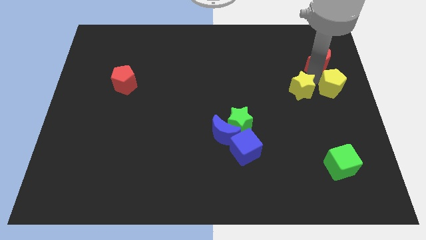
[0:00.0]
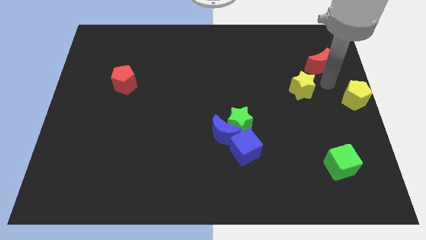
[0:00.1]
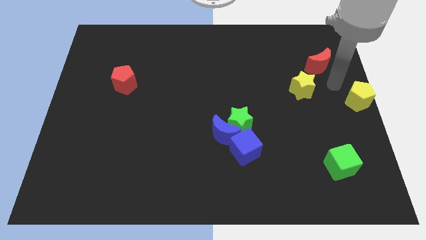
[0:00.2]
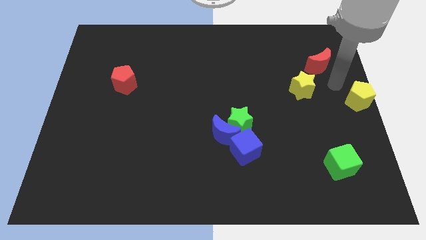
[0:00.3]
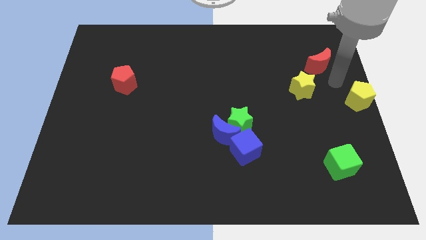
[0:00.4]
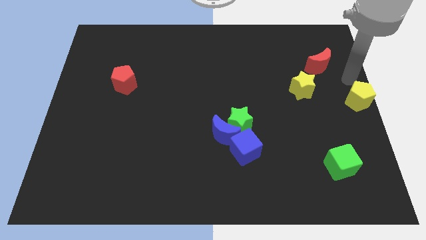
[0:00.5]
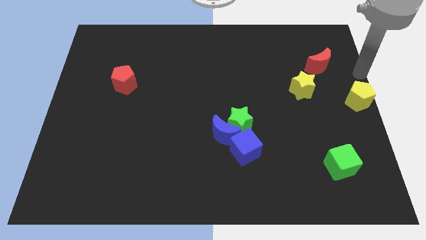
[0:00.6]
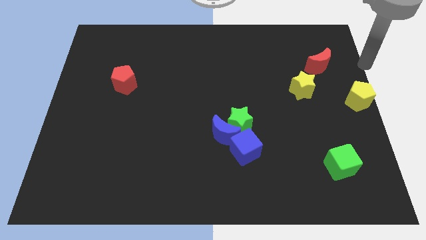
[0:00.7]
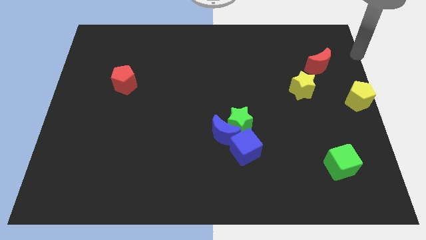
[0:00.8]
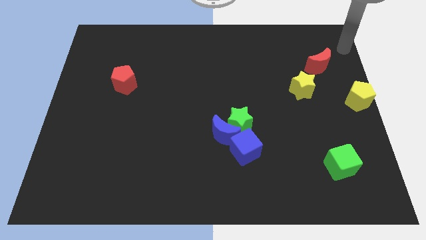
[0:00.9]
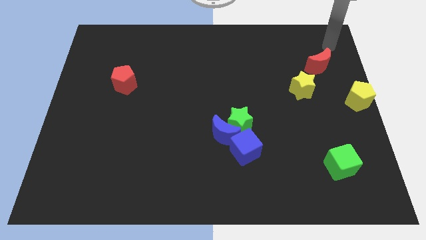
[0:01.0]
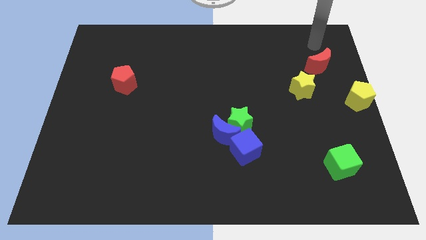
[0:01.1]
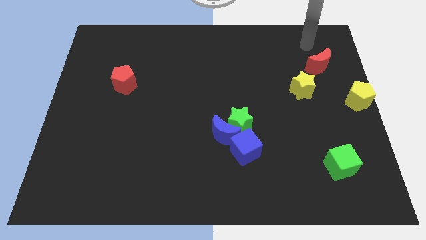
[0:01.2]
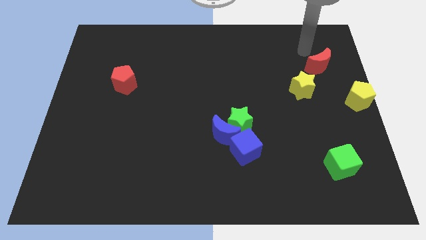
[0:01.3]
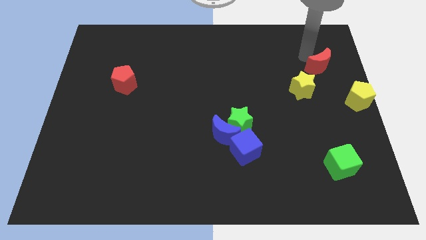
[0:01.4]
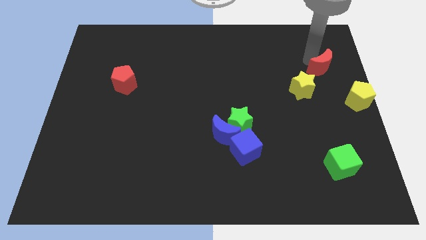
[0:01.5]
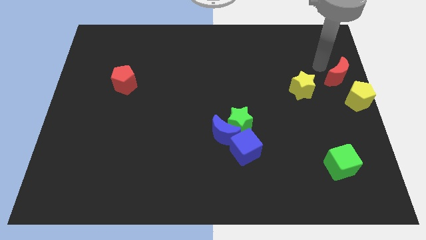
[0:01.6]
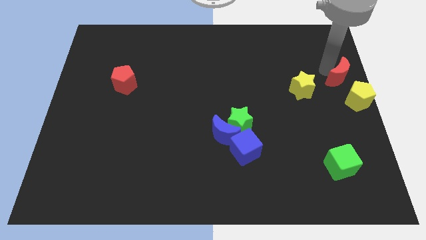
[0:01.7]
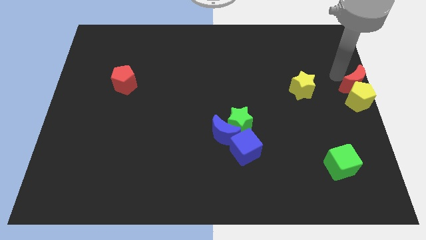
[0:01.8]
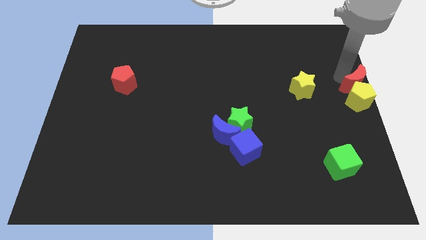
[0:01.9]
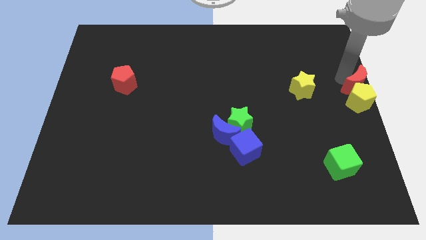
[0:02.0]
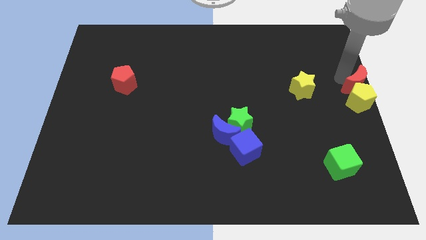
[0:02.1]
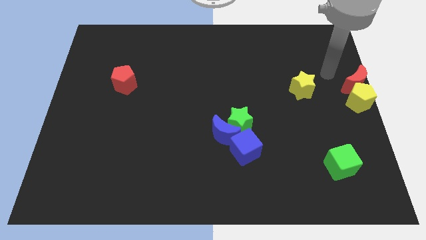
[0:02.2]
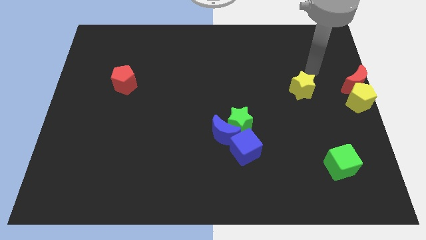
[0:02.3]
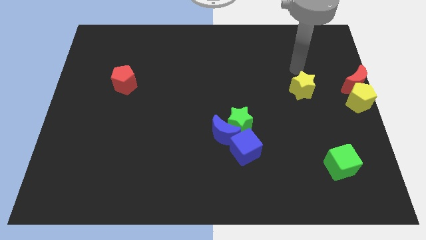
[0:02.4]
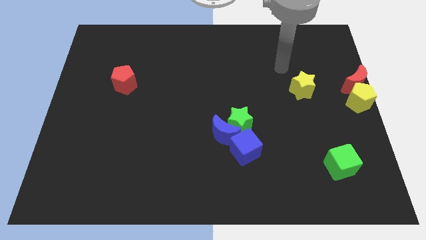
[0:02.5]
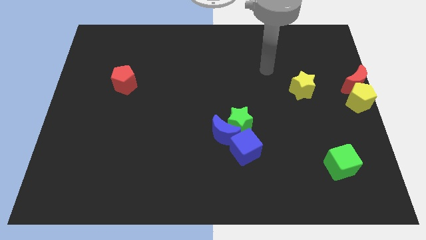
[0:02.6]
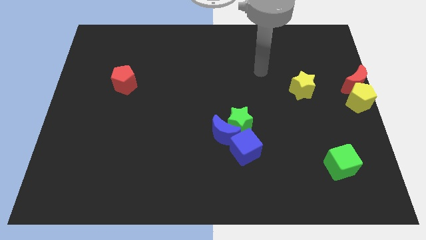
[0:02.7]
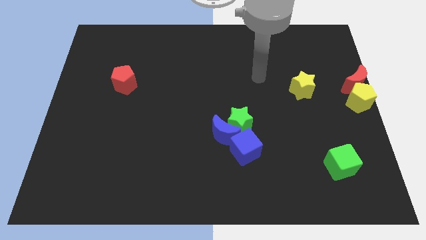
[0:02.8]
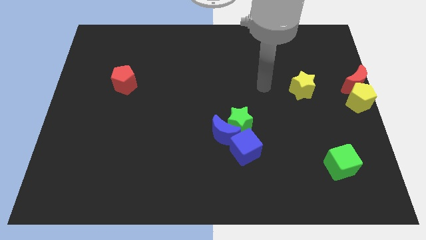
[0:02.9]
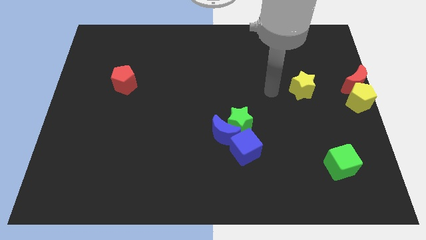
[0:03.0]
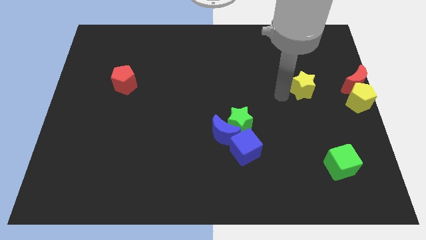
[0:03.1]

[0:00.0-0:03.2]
place red moon to the top of yellow pentagon

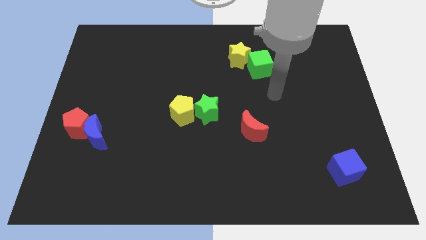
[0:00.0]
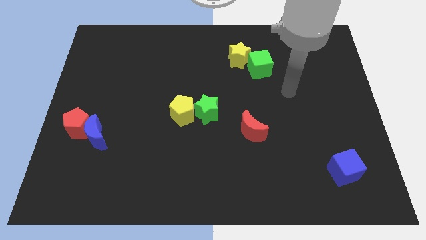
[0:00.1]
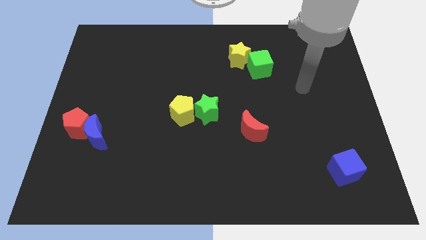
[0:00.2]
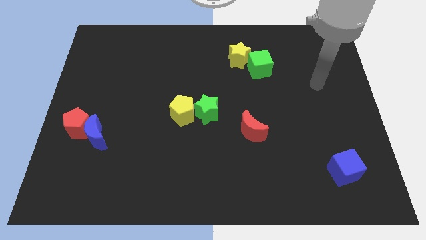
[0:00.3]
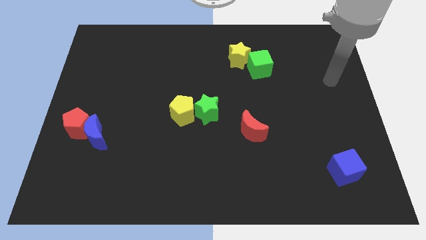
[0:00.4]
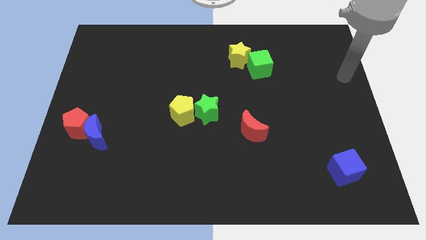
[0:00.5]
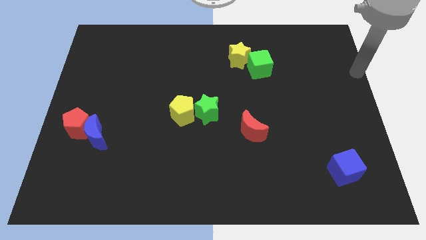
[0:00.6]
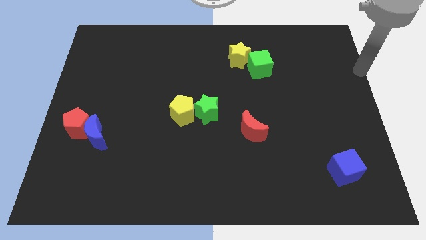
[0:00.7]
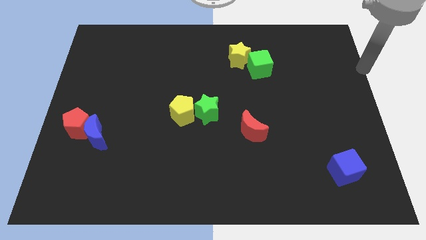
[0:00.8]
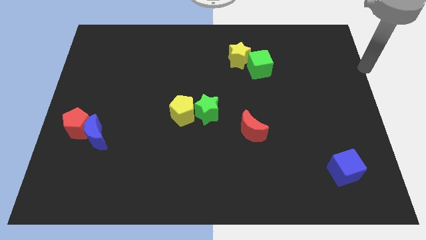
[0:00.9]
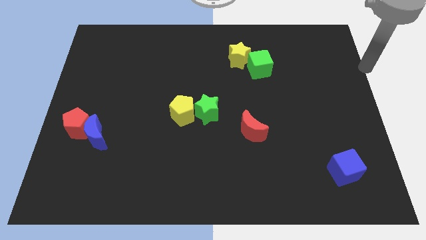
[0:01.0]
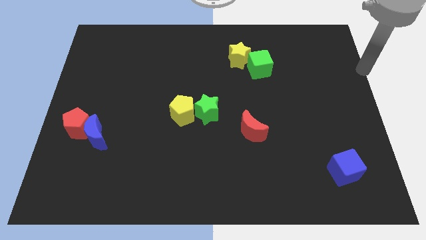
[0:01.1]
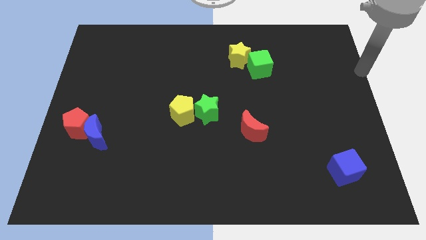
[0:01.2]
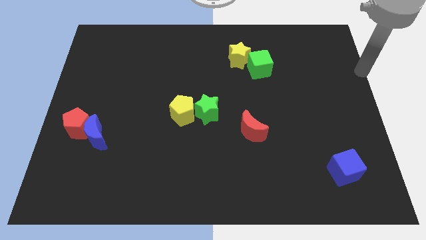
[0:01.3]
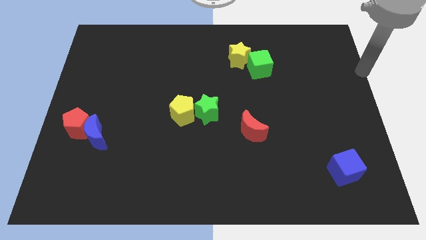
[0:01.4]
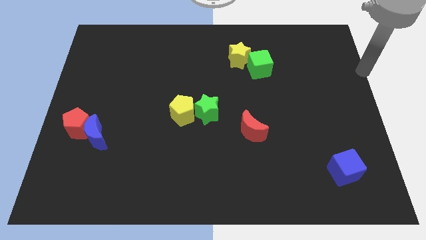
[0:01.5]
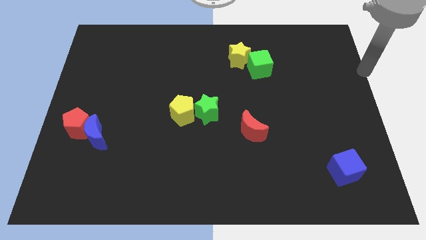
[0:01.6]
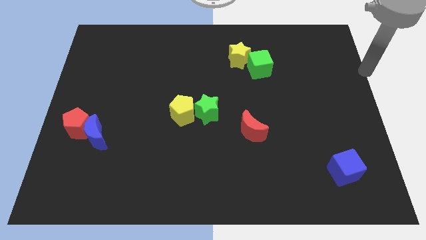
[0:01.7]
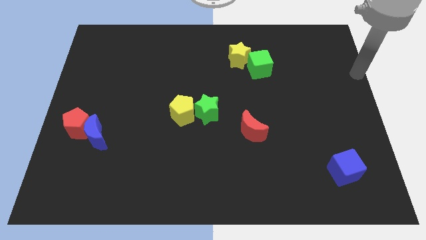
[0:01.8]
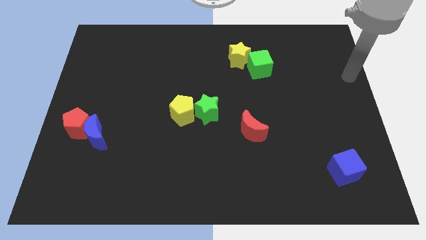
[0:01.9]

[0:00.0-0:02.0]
point the arm to the right side of the green cube

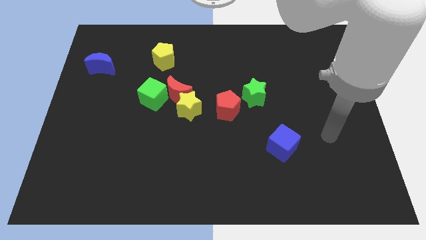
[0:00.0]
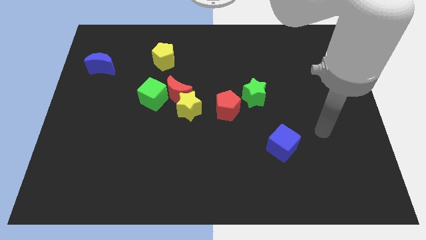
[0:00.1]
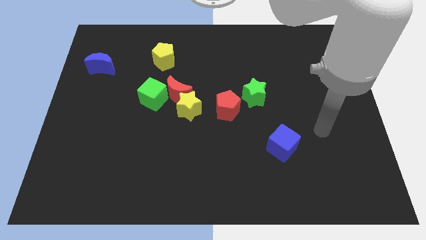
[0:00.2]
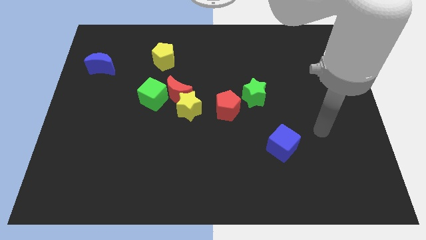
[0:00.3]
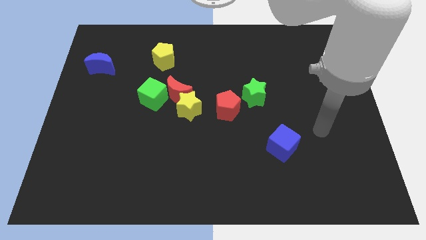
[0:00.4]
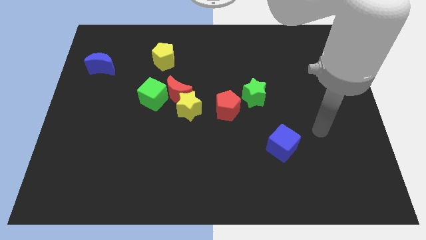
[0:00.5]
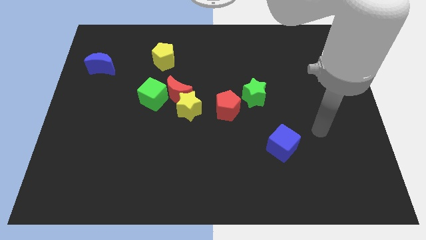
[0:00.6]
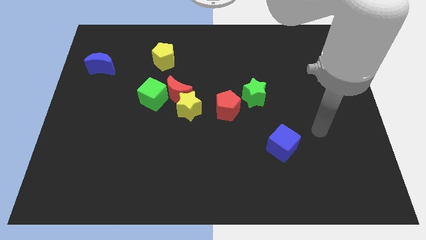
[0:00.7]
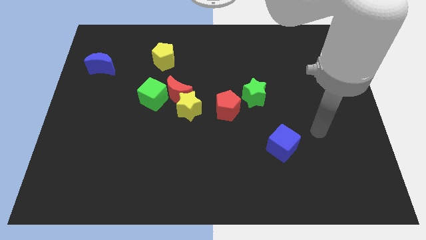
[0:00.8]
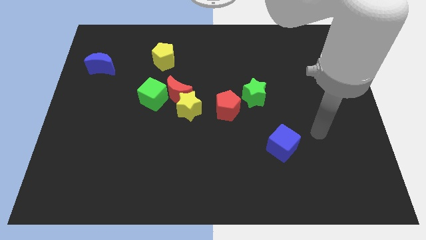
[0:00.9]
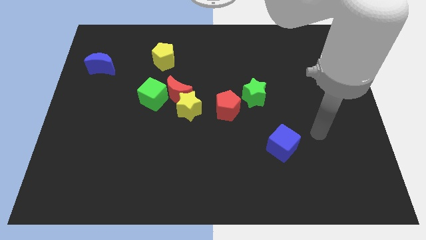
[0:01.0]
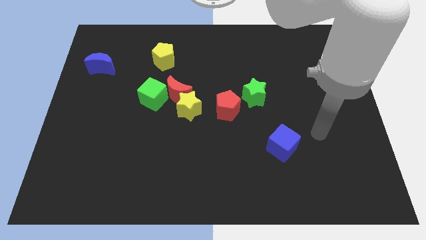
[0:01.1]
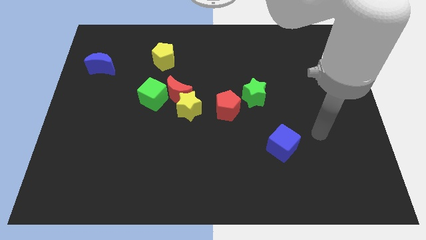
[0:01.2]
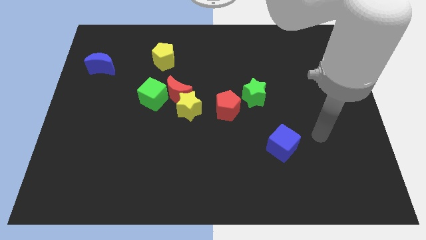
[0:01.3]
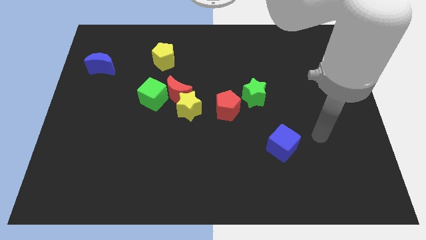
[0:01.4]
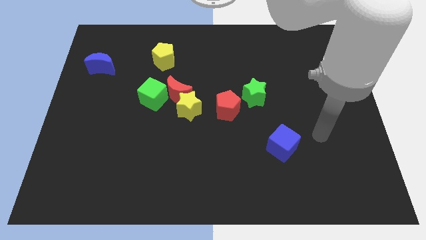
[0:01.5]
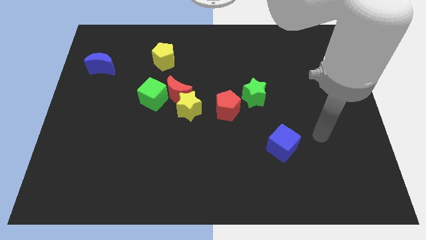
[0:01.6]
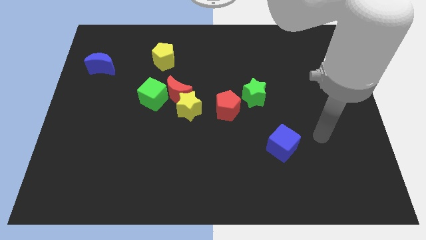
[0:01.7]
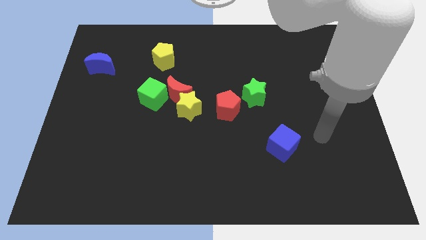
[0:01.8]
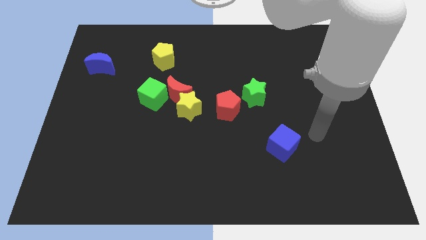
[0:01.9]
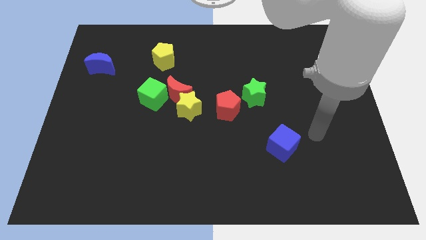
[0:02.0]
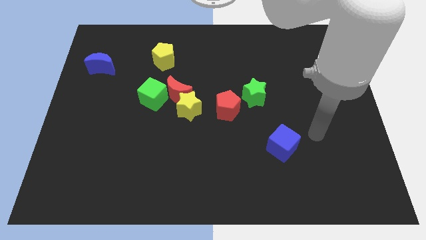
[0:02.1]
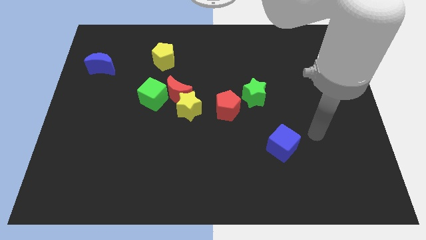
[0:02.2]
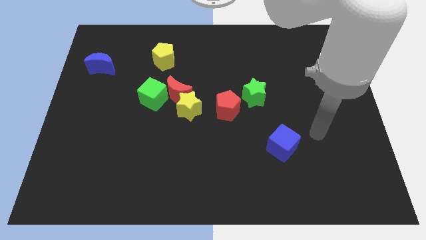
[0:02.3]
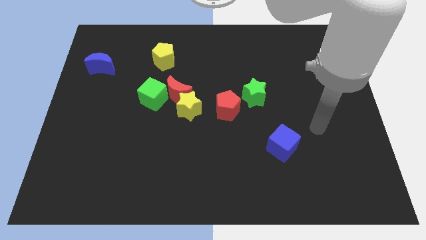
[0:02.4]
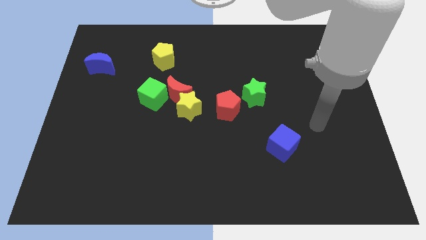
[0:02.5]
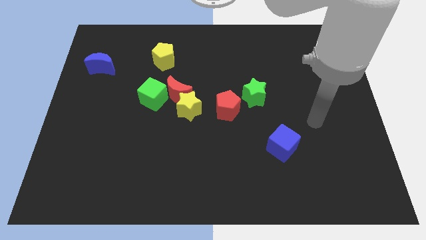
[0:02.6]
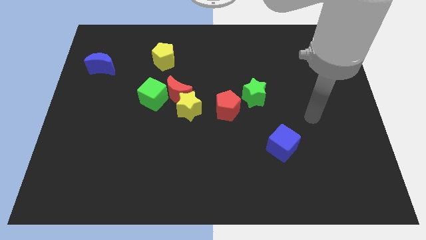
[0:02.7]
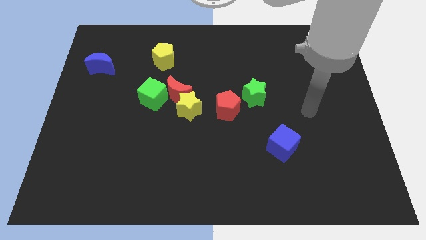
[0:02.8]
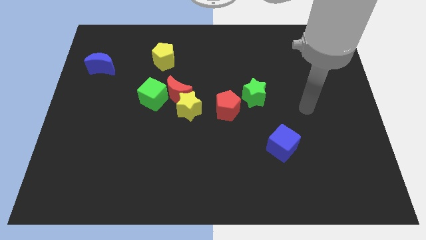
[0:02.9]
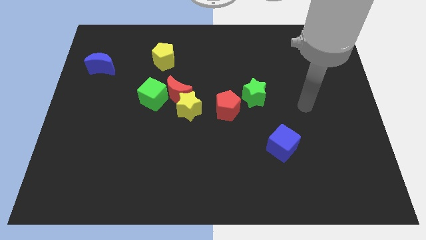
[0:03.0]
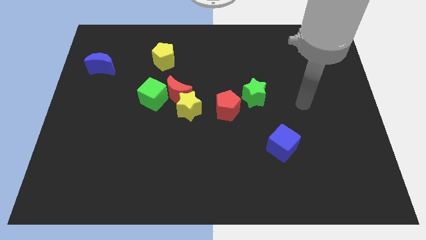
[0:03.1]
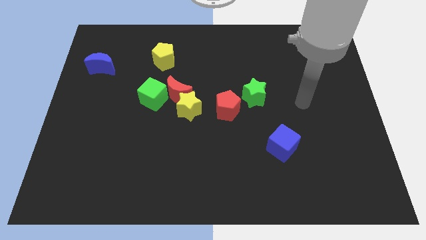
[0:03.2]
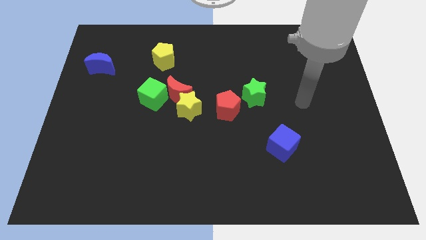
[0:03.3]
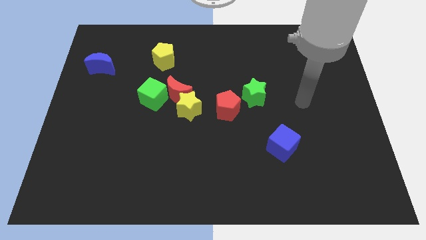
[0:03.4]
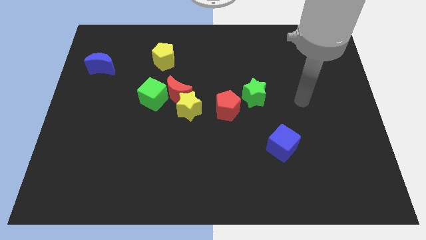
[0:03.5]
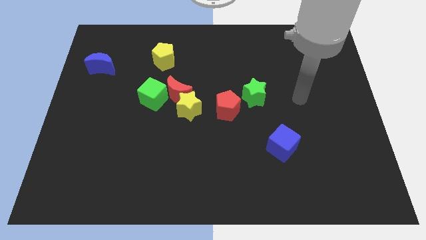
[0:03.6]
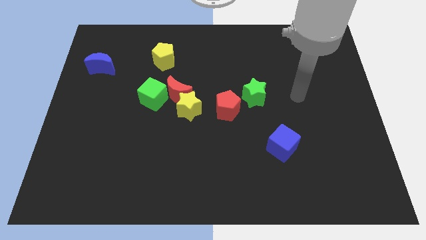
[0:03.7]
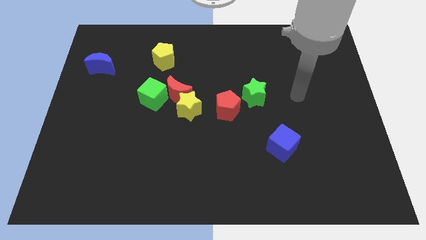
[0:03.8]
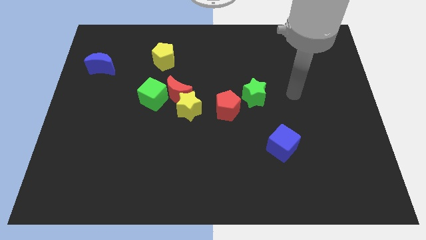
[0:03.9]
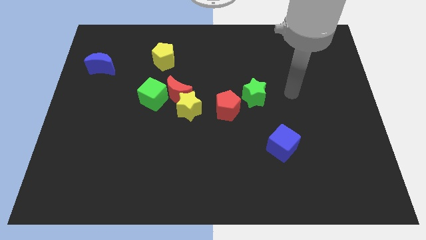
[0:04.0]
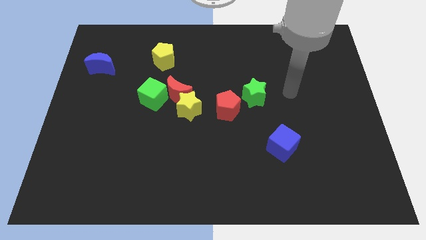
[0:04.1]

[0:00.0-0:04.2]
move your arm to the right side of the green star
